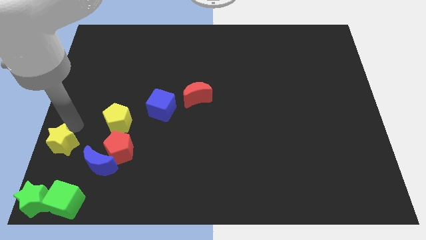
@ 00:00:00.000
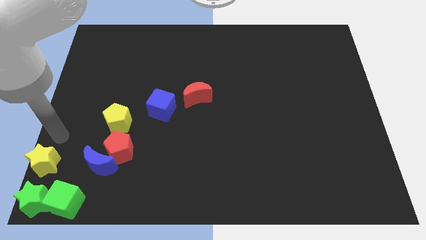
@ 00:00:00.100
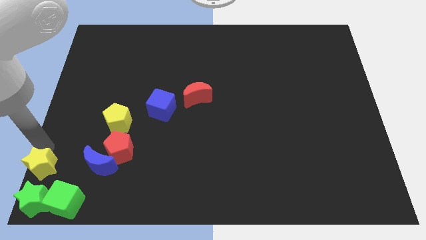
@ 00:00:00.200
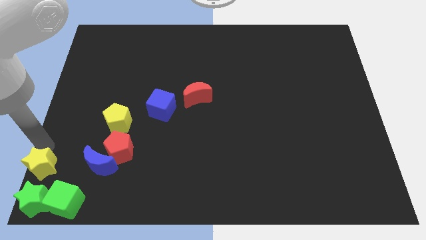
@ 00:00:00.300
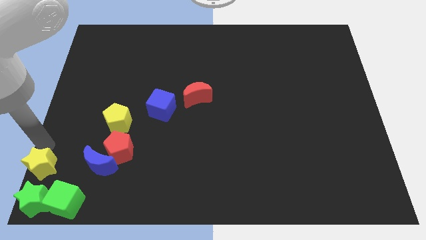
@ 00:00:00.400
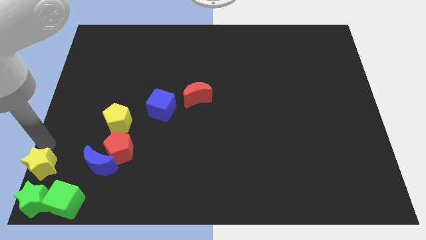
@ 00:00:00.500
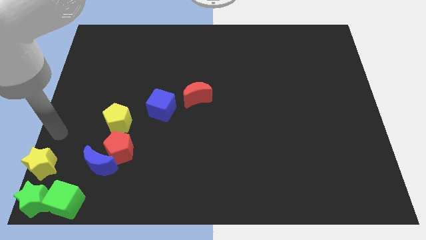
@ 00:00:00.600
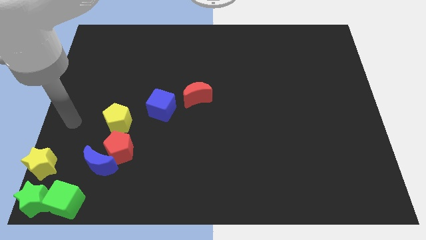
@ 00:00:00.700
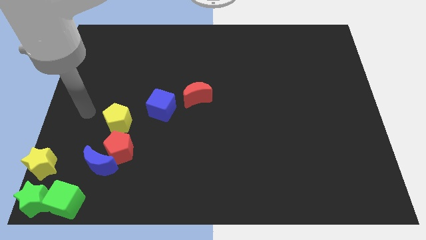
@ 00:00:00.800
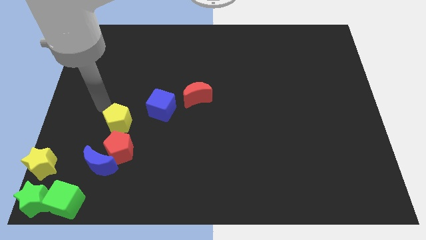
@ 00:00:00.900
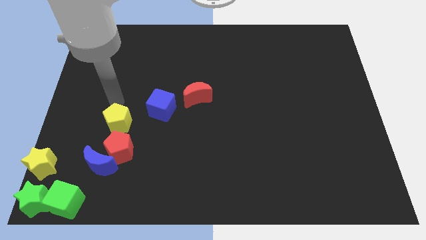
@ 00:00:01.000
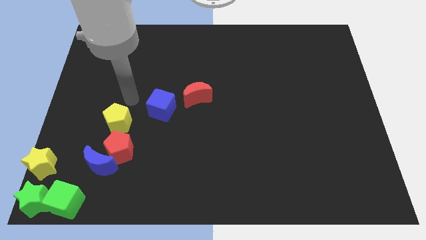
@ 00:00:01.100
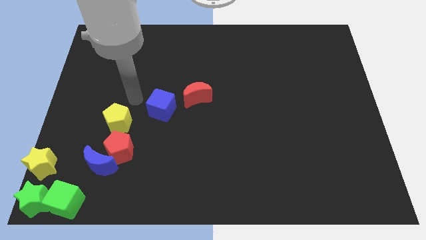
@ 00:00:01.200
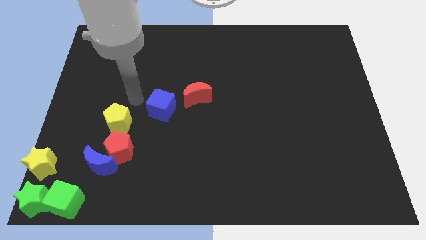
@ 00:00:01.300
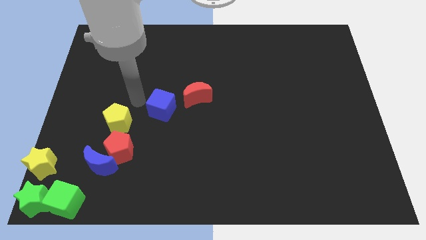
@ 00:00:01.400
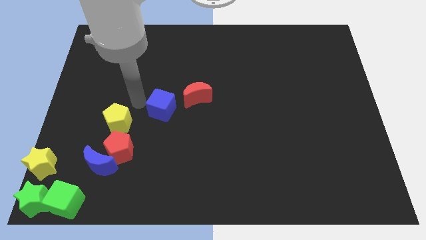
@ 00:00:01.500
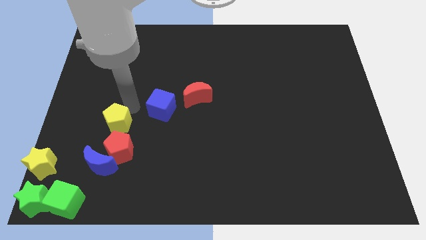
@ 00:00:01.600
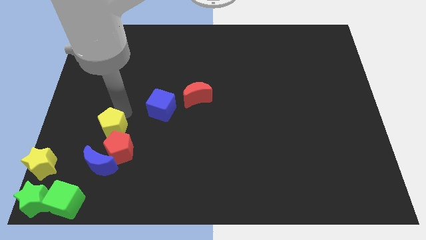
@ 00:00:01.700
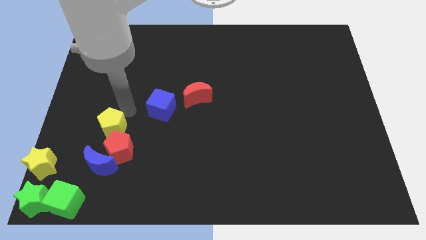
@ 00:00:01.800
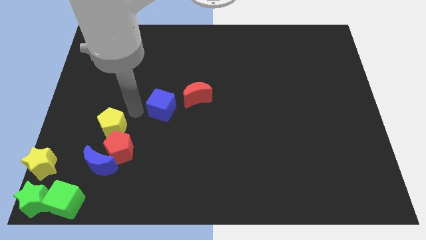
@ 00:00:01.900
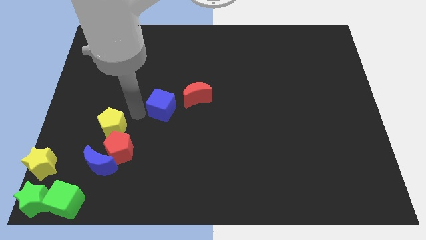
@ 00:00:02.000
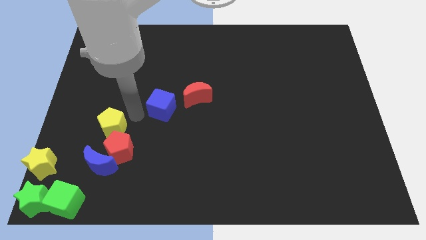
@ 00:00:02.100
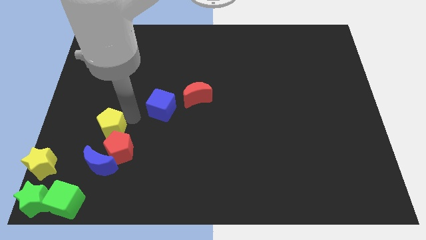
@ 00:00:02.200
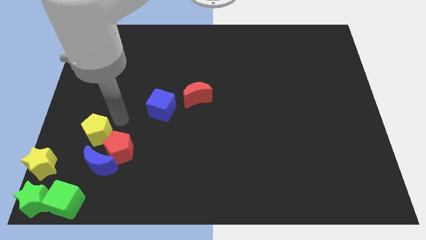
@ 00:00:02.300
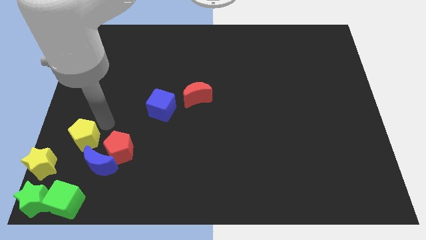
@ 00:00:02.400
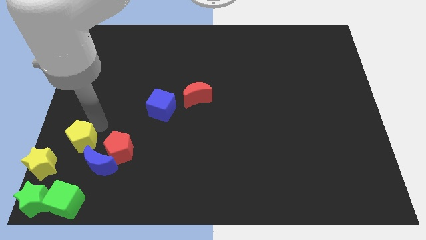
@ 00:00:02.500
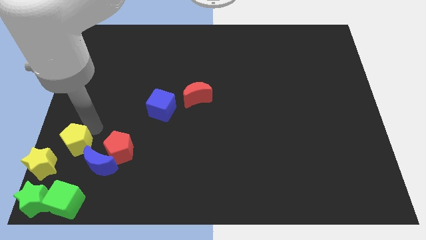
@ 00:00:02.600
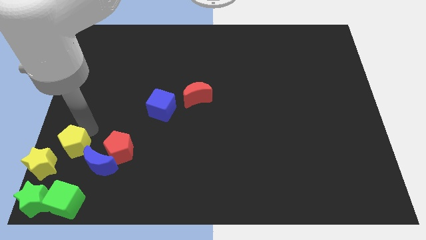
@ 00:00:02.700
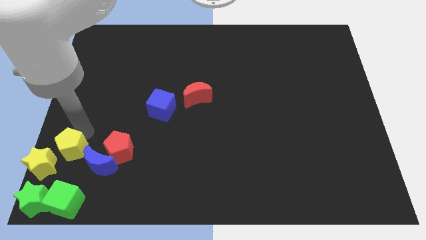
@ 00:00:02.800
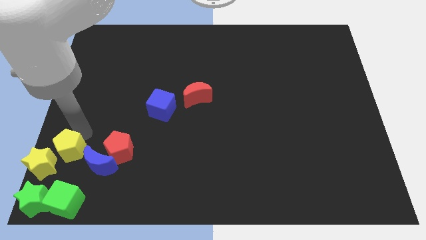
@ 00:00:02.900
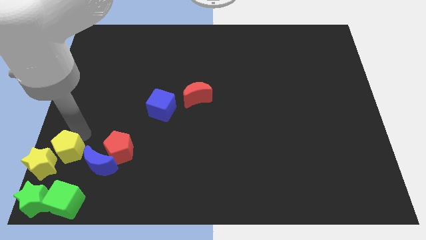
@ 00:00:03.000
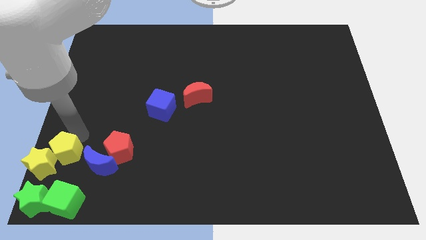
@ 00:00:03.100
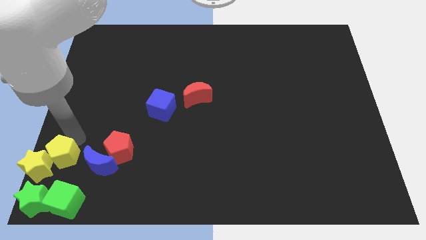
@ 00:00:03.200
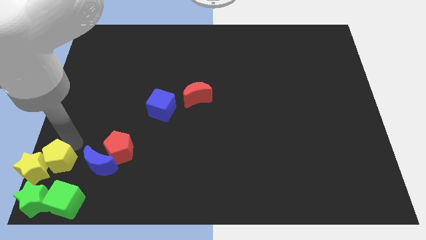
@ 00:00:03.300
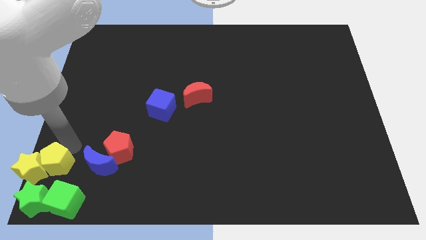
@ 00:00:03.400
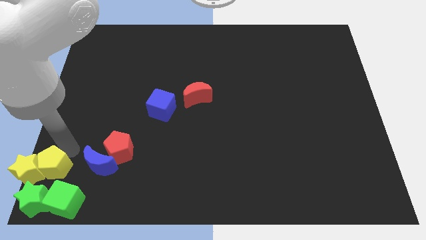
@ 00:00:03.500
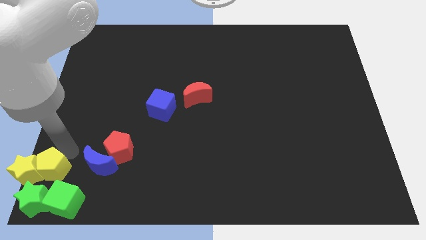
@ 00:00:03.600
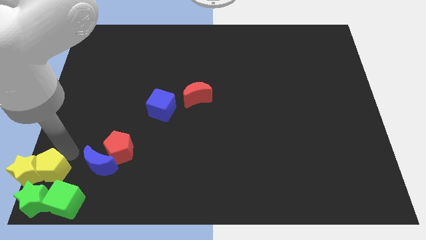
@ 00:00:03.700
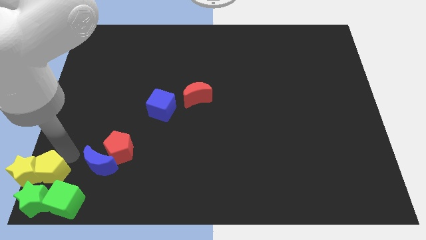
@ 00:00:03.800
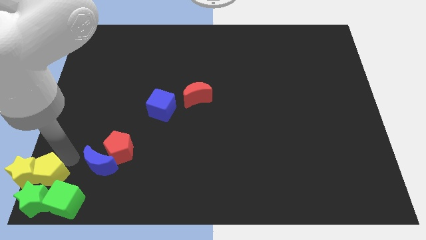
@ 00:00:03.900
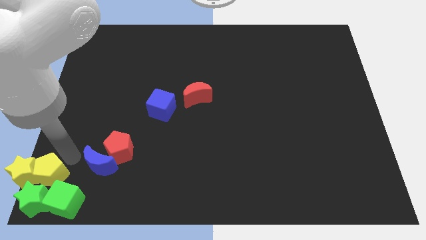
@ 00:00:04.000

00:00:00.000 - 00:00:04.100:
move the yellow blocks above the green blocks at the bottom left

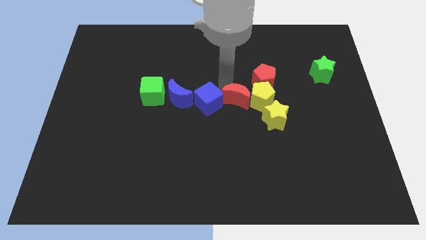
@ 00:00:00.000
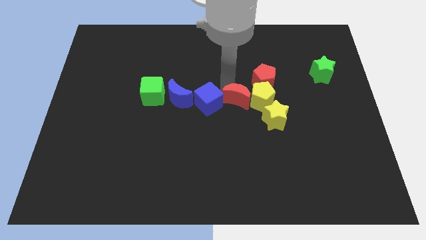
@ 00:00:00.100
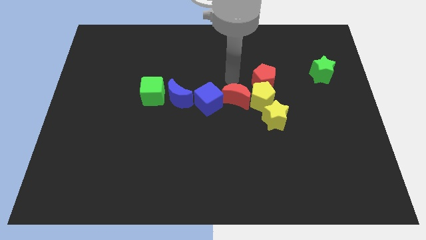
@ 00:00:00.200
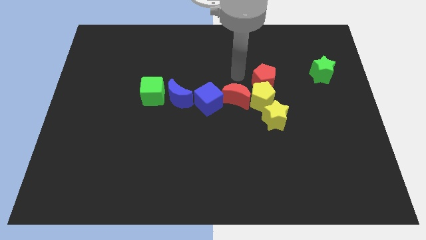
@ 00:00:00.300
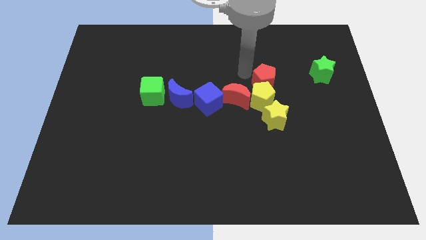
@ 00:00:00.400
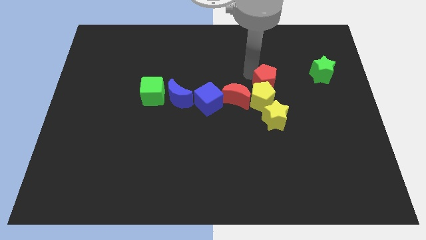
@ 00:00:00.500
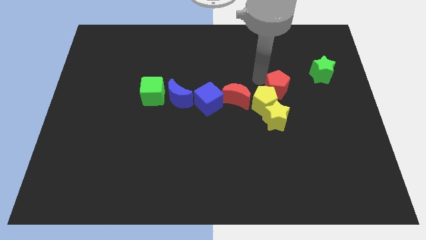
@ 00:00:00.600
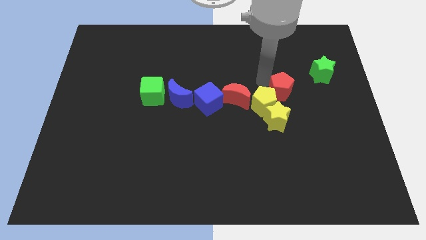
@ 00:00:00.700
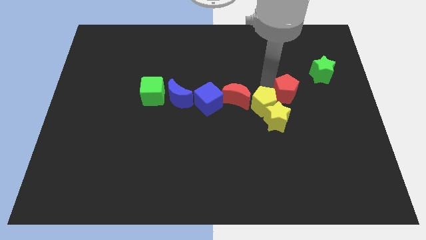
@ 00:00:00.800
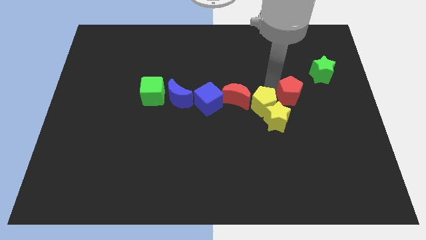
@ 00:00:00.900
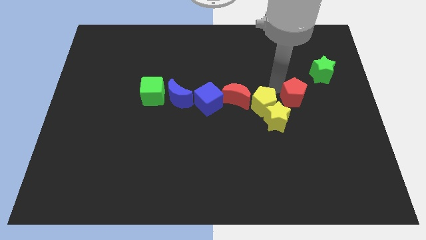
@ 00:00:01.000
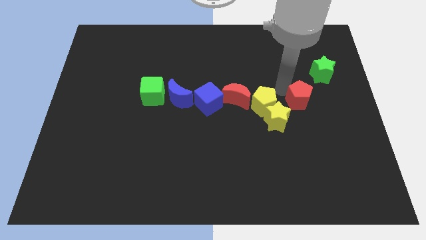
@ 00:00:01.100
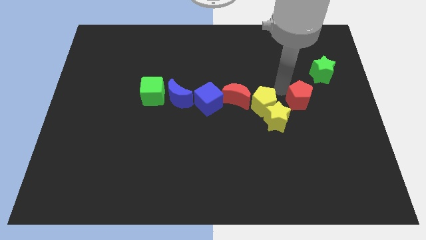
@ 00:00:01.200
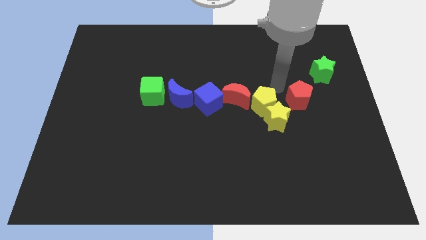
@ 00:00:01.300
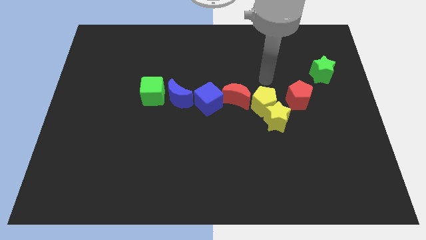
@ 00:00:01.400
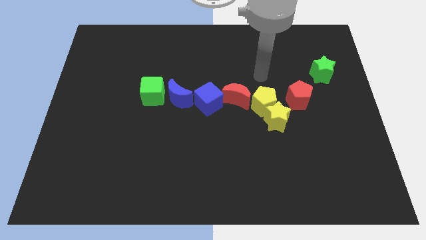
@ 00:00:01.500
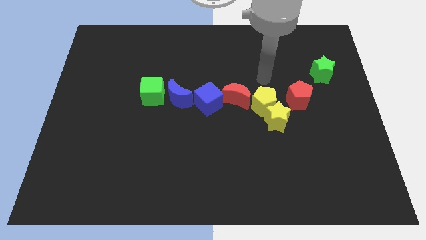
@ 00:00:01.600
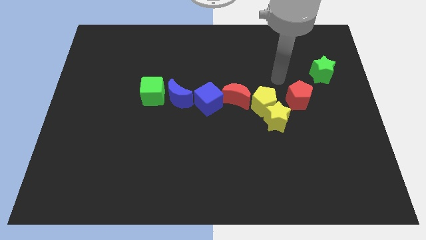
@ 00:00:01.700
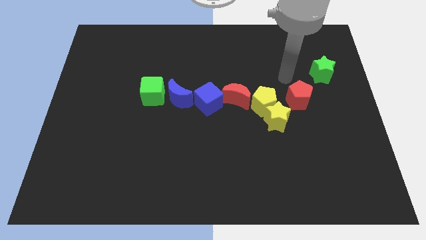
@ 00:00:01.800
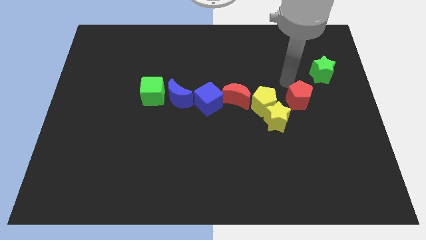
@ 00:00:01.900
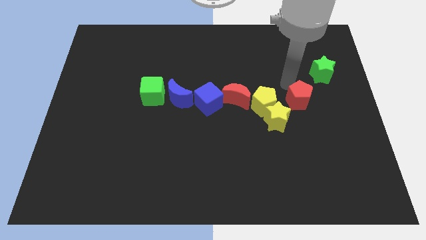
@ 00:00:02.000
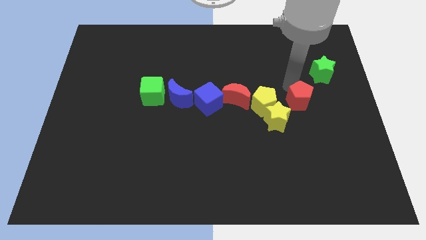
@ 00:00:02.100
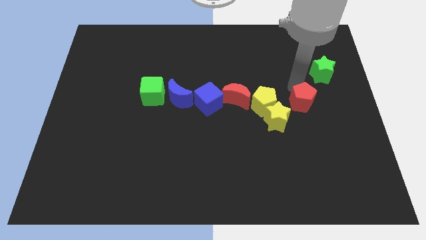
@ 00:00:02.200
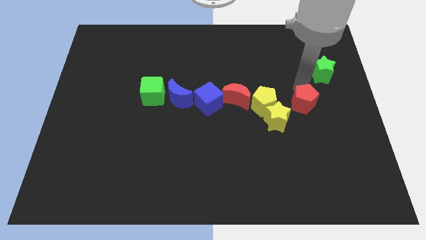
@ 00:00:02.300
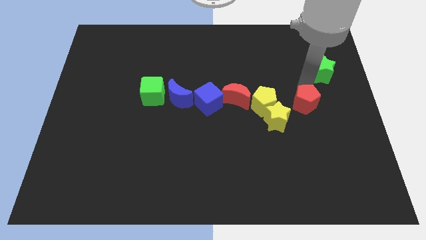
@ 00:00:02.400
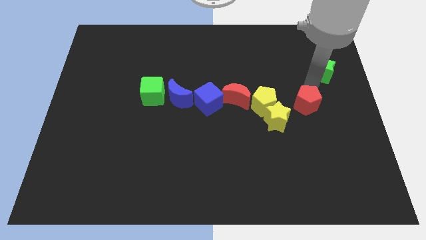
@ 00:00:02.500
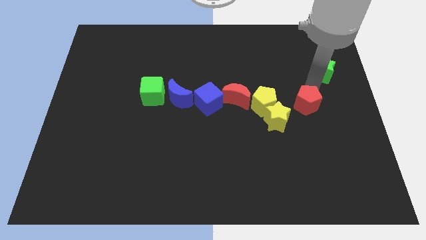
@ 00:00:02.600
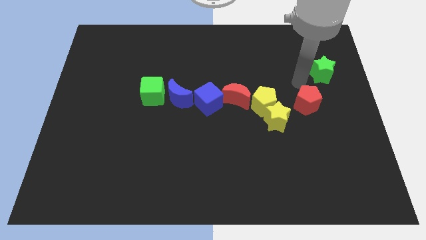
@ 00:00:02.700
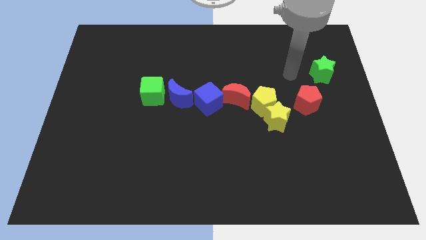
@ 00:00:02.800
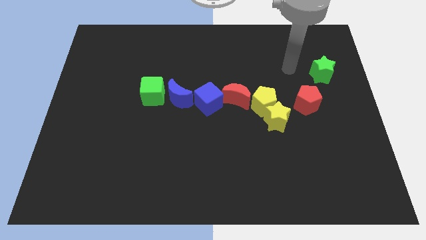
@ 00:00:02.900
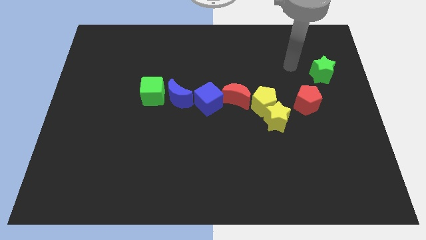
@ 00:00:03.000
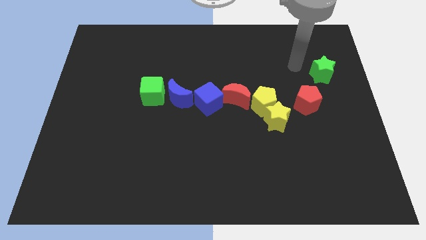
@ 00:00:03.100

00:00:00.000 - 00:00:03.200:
push the red pentagon to the right side of the yellow pentagon

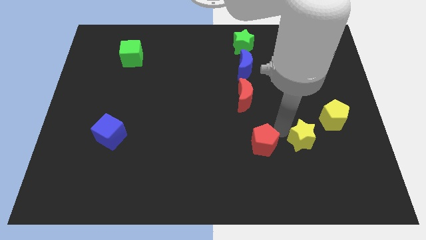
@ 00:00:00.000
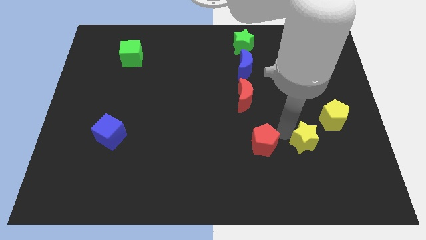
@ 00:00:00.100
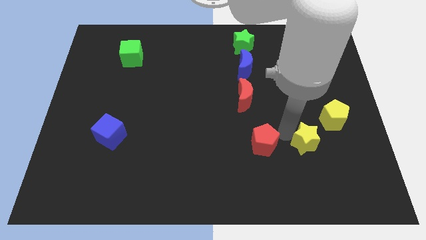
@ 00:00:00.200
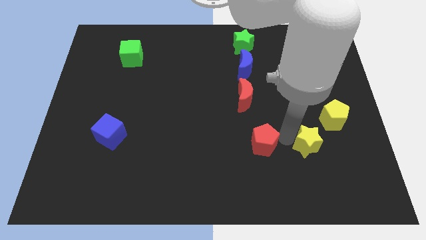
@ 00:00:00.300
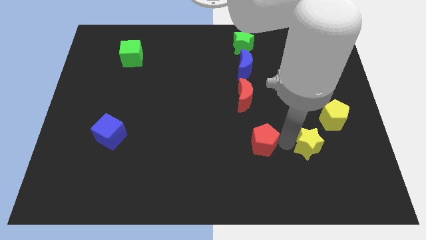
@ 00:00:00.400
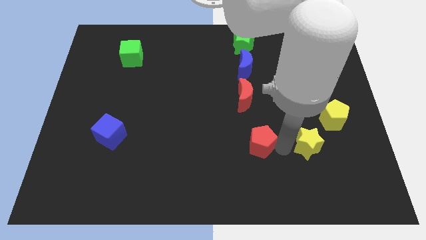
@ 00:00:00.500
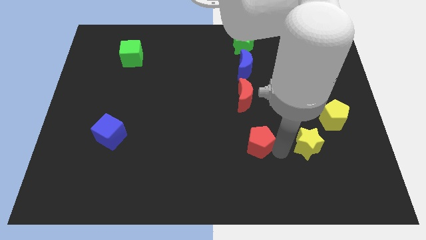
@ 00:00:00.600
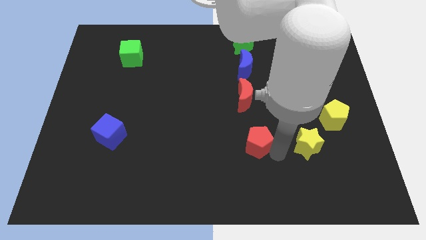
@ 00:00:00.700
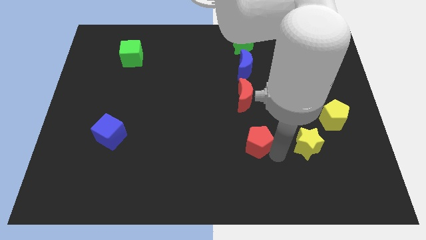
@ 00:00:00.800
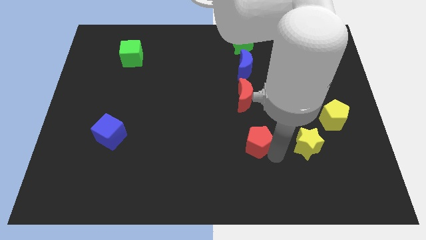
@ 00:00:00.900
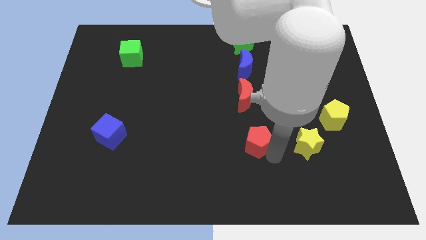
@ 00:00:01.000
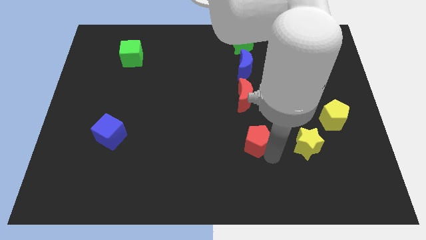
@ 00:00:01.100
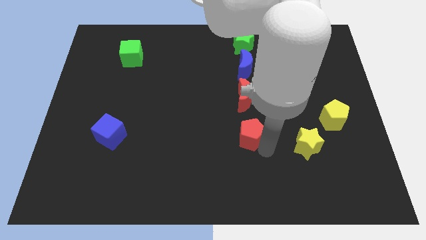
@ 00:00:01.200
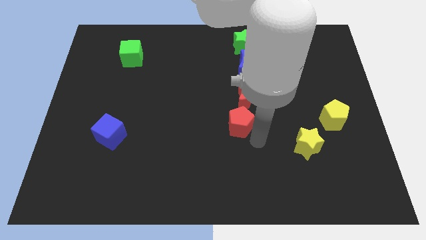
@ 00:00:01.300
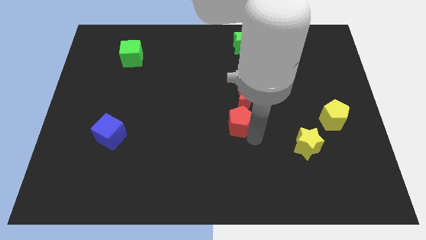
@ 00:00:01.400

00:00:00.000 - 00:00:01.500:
place the red pentagon below the red moon
